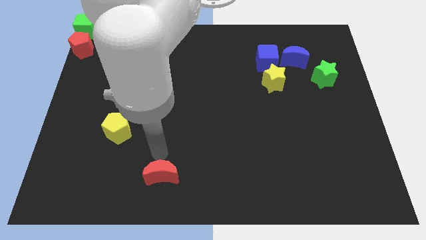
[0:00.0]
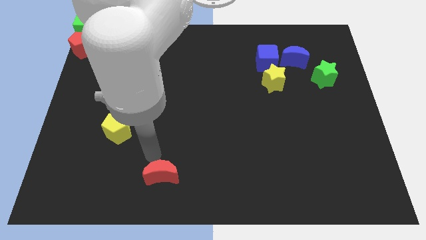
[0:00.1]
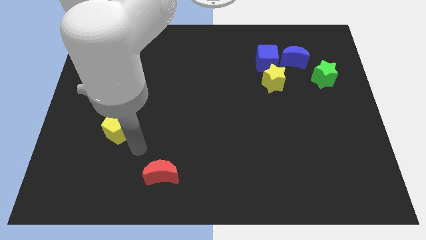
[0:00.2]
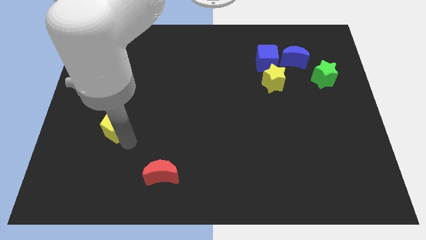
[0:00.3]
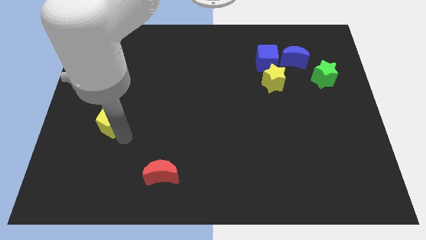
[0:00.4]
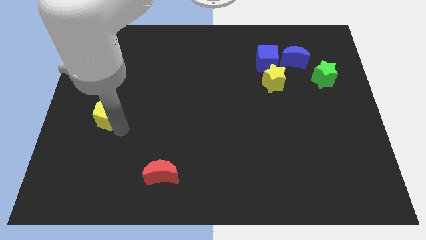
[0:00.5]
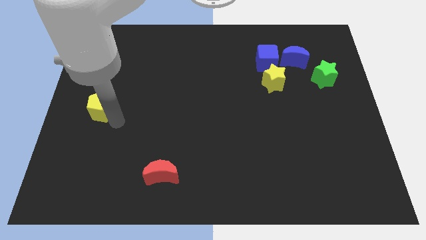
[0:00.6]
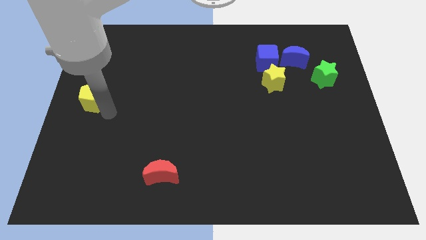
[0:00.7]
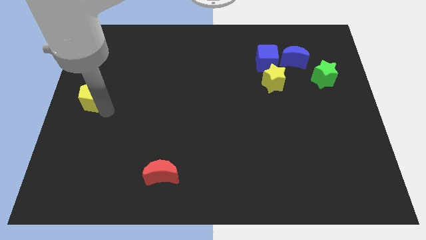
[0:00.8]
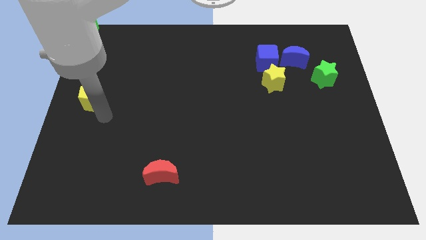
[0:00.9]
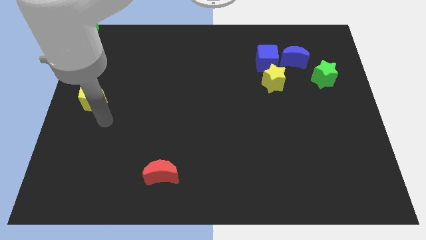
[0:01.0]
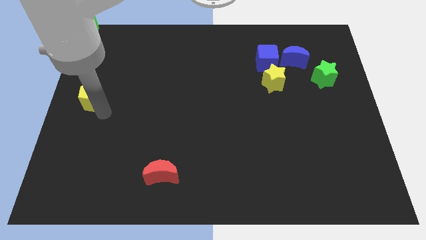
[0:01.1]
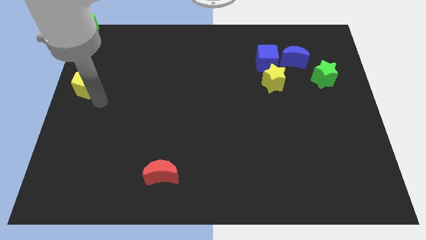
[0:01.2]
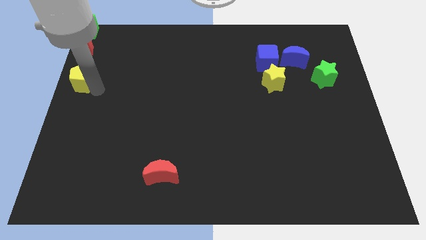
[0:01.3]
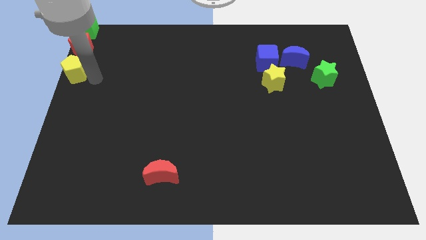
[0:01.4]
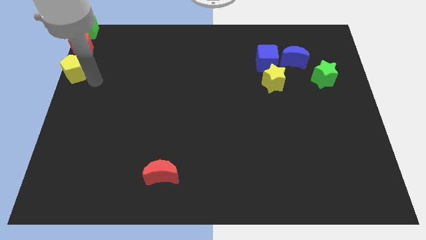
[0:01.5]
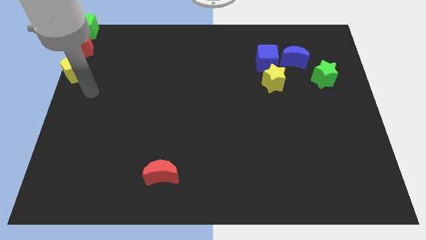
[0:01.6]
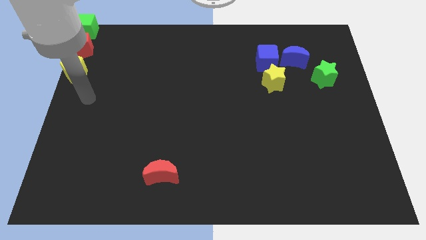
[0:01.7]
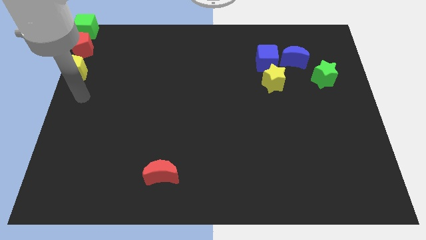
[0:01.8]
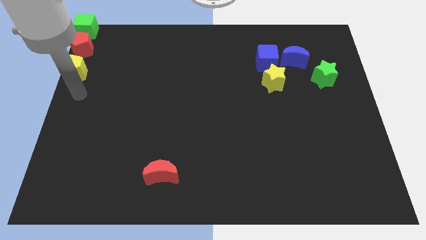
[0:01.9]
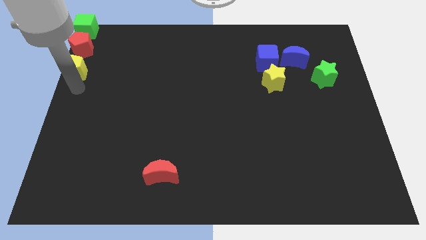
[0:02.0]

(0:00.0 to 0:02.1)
place yellow pentagon below the red pentagon

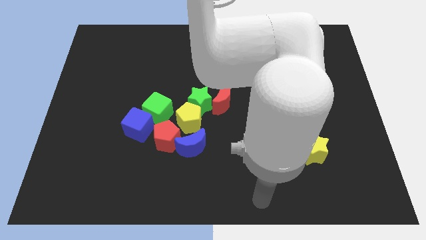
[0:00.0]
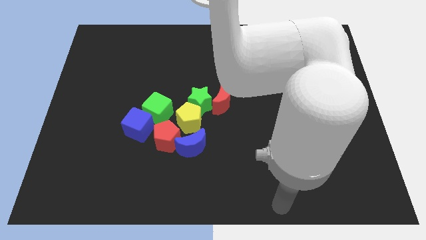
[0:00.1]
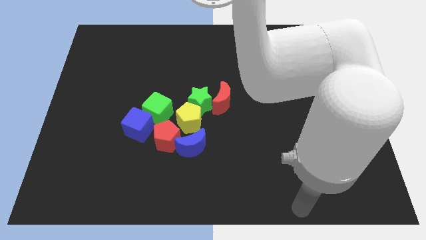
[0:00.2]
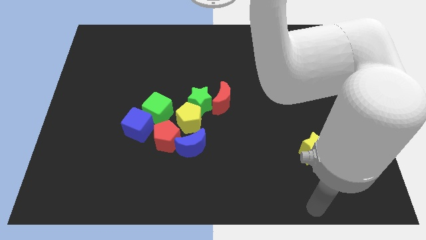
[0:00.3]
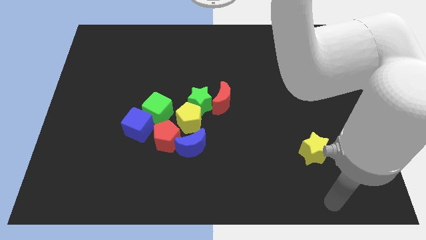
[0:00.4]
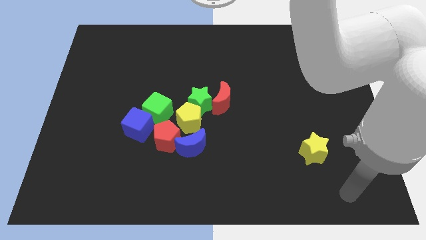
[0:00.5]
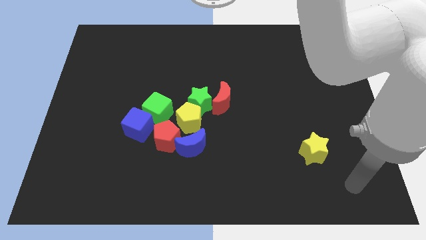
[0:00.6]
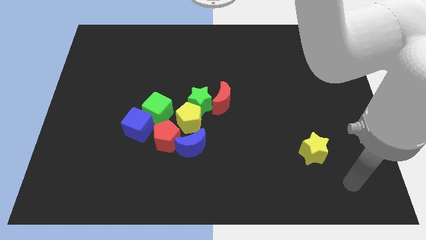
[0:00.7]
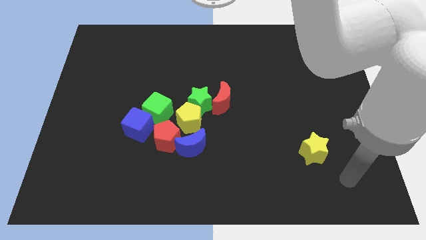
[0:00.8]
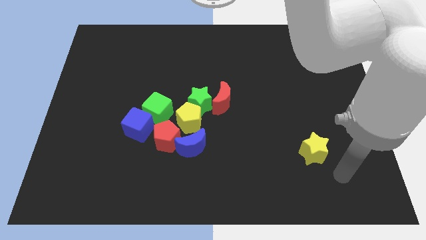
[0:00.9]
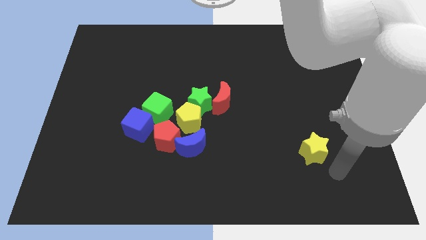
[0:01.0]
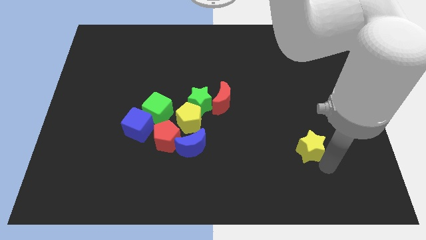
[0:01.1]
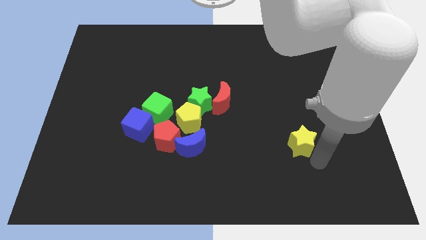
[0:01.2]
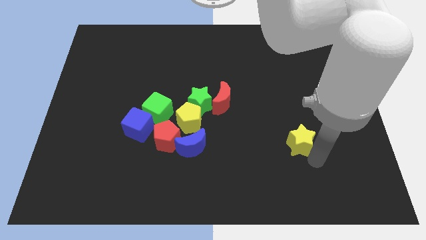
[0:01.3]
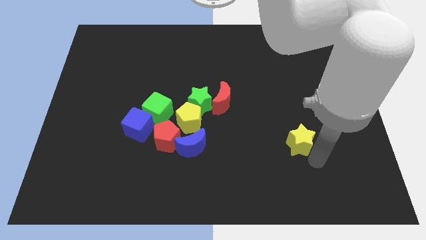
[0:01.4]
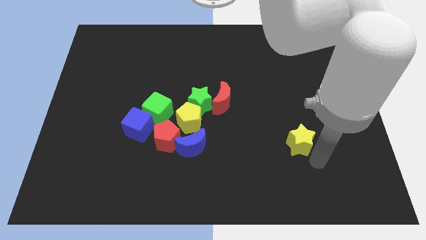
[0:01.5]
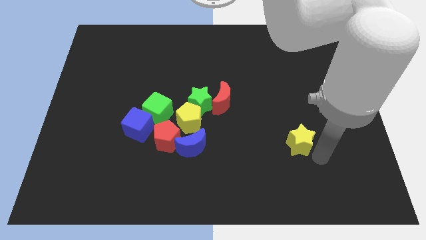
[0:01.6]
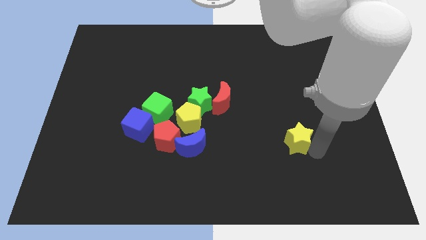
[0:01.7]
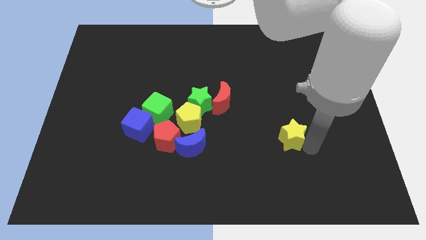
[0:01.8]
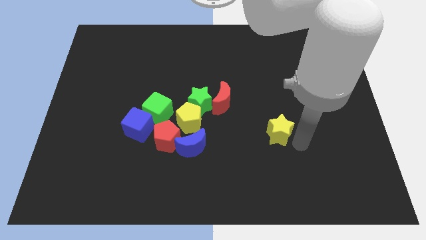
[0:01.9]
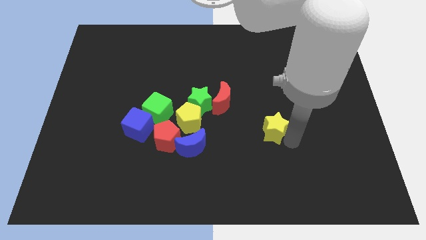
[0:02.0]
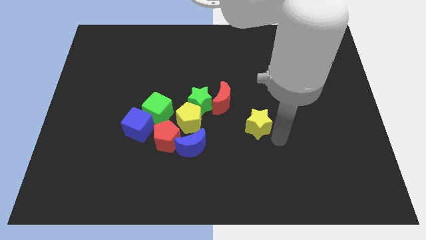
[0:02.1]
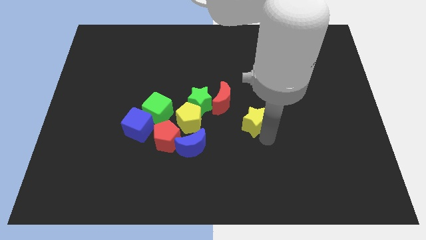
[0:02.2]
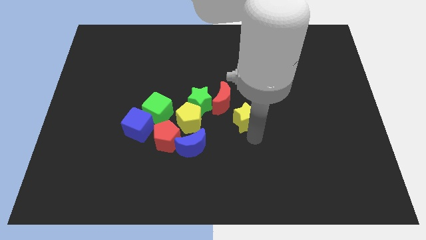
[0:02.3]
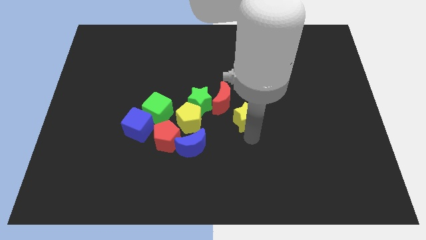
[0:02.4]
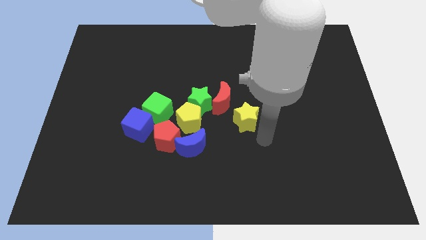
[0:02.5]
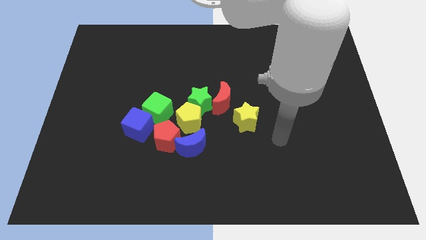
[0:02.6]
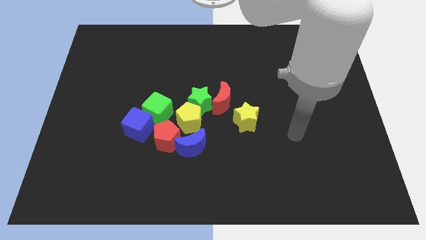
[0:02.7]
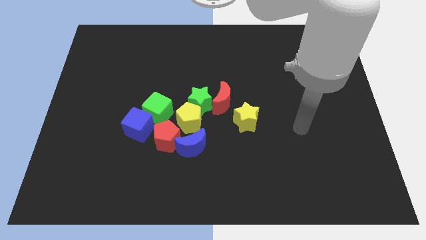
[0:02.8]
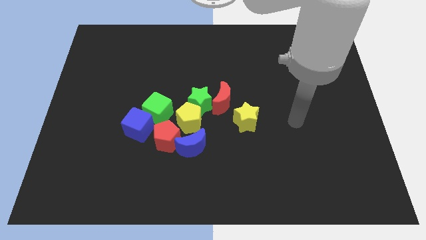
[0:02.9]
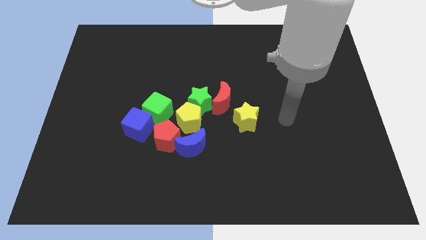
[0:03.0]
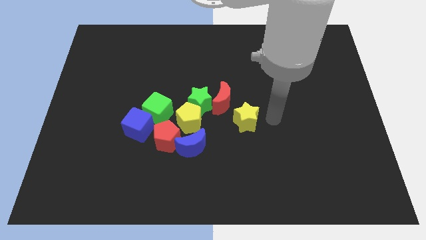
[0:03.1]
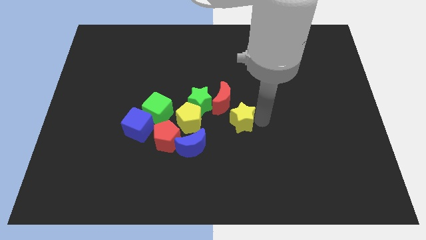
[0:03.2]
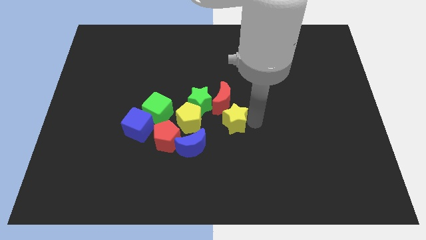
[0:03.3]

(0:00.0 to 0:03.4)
push the yellow star to the bottom right side of the red moon

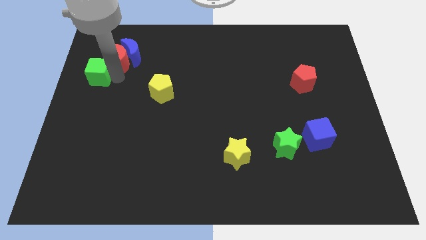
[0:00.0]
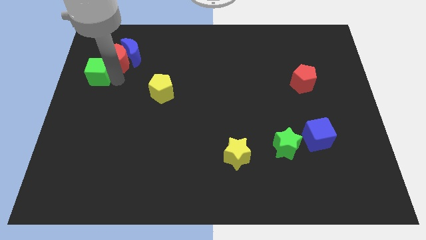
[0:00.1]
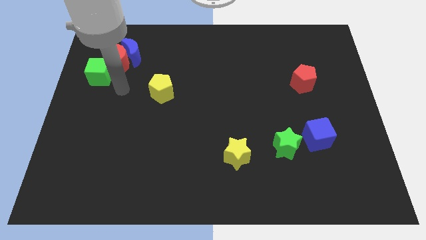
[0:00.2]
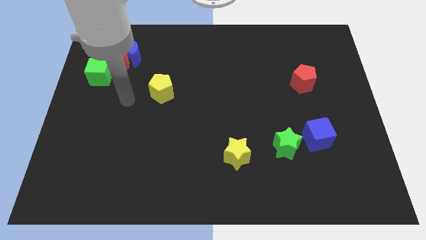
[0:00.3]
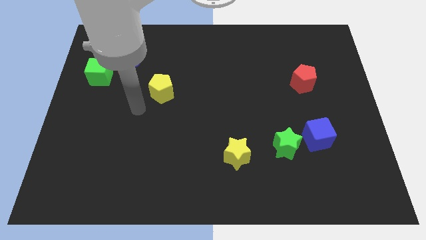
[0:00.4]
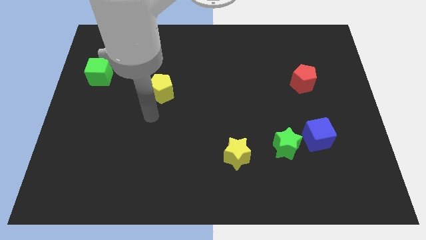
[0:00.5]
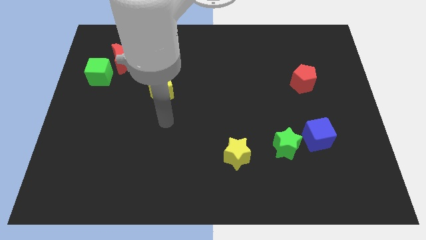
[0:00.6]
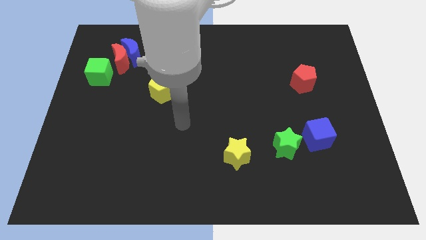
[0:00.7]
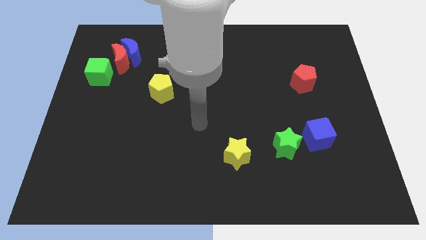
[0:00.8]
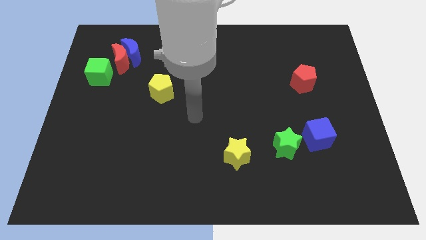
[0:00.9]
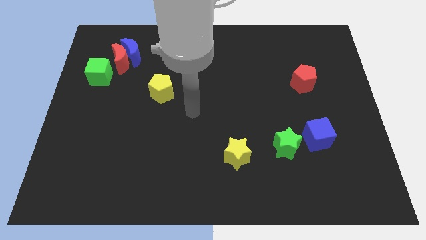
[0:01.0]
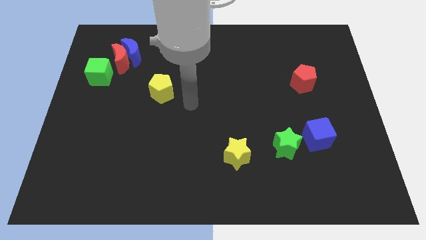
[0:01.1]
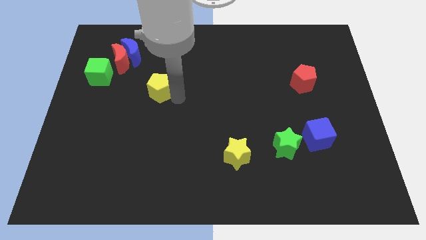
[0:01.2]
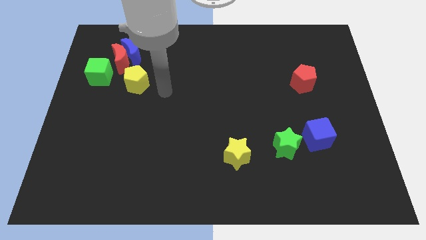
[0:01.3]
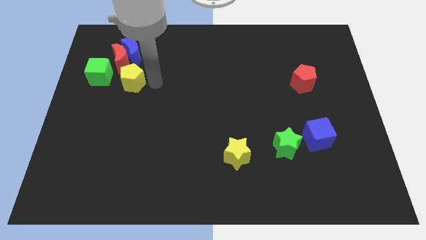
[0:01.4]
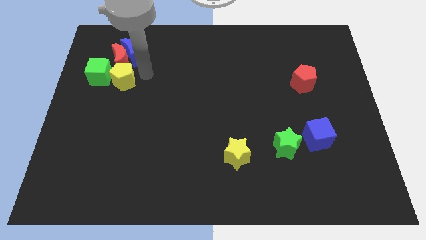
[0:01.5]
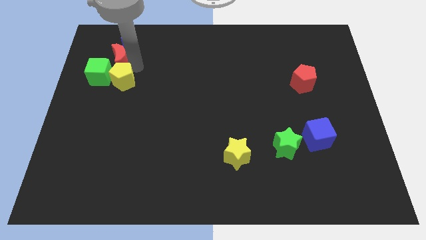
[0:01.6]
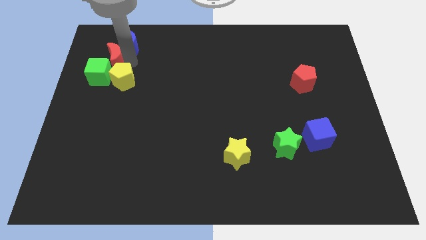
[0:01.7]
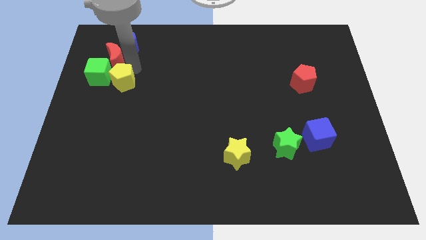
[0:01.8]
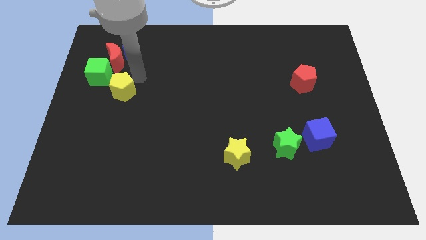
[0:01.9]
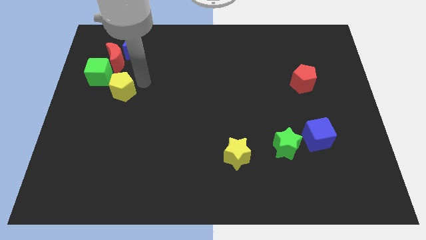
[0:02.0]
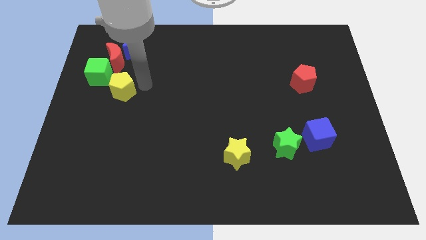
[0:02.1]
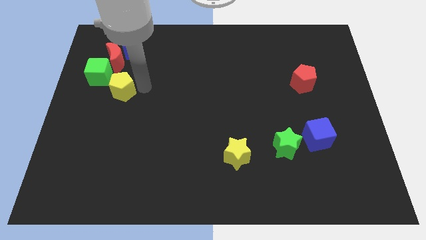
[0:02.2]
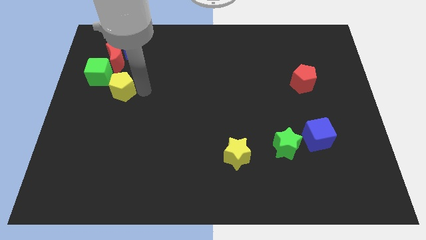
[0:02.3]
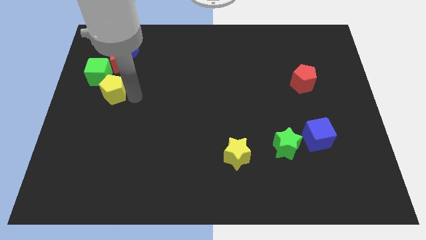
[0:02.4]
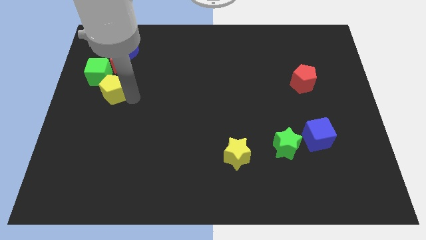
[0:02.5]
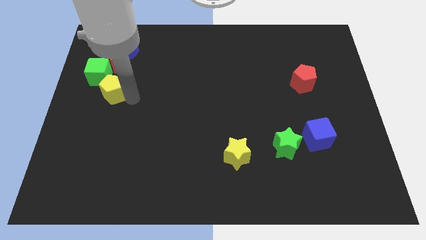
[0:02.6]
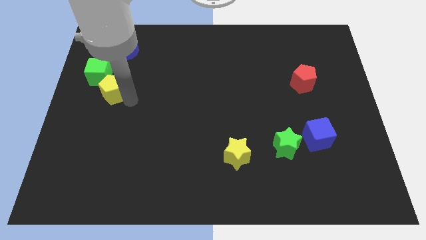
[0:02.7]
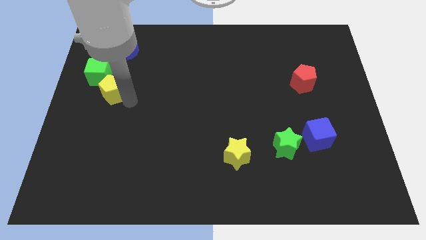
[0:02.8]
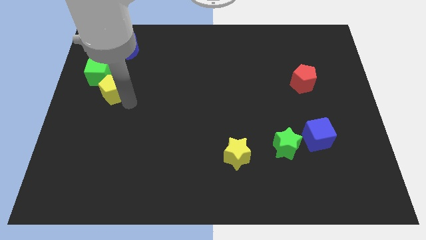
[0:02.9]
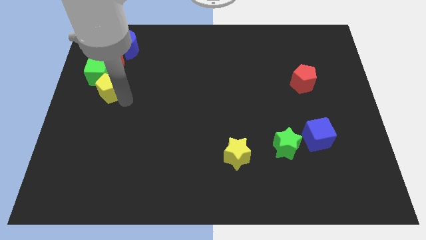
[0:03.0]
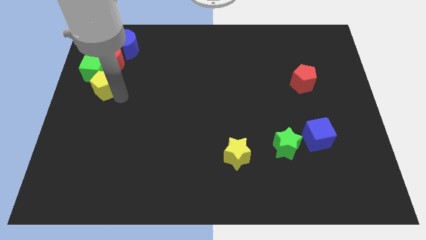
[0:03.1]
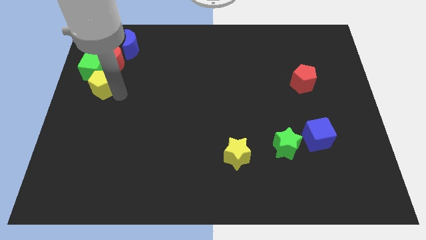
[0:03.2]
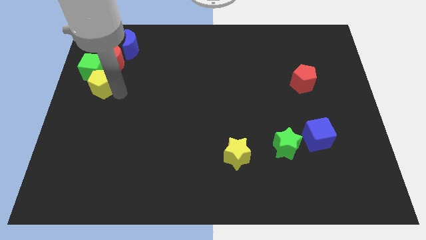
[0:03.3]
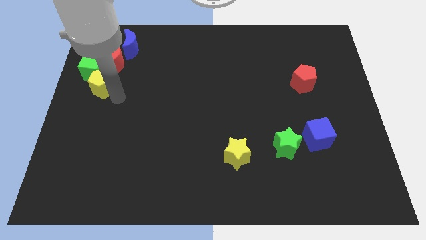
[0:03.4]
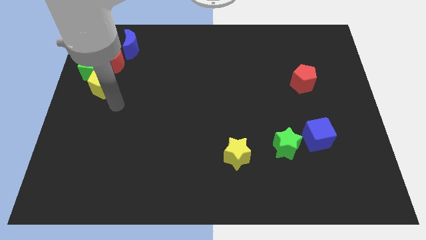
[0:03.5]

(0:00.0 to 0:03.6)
push the yellow pentagon into the green cube
